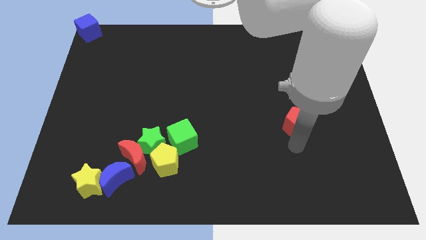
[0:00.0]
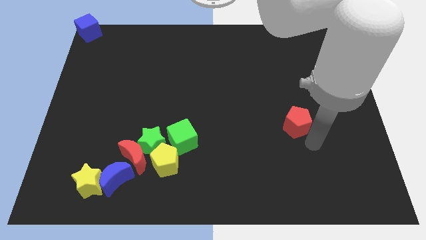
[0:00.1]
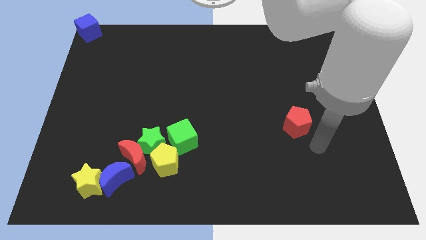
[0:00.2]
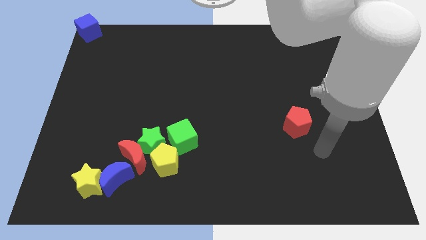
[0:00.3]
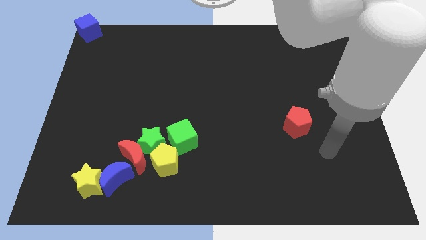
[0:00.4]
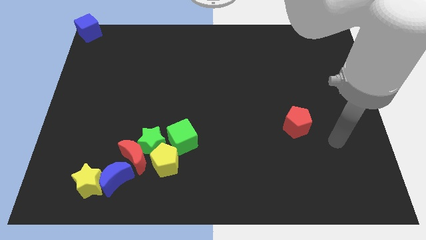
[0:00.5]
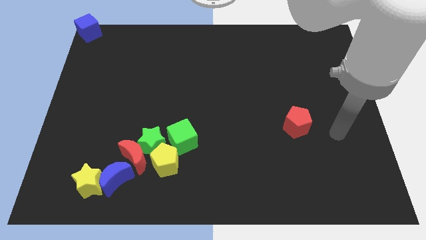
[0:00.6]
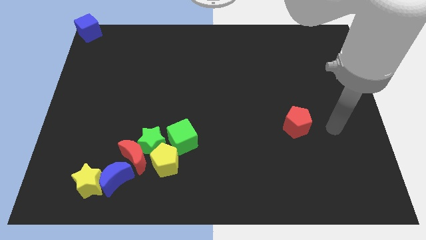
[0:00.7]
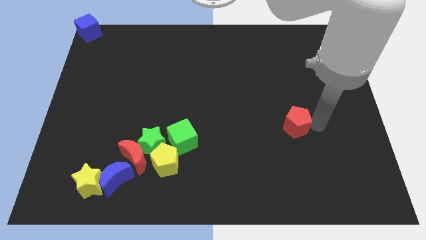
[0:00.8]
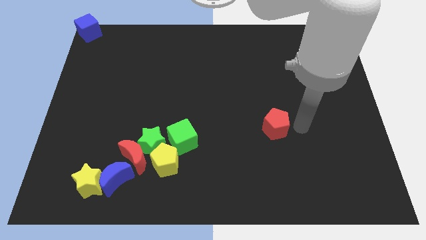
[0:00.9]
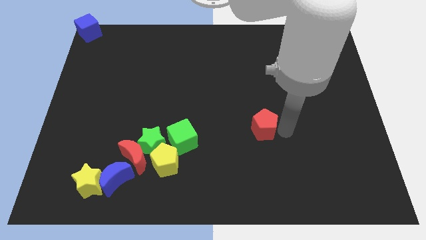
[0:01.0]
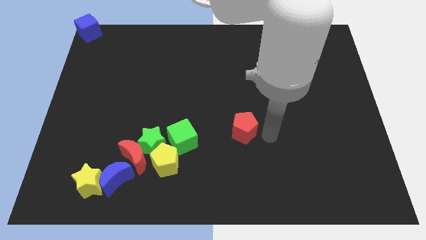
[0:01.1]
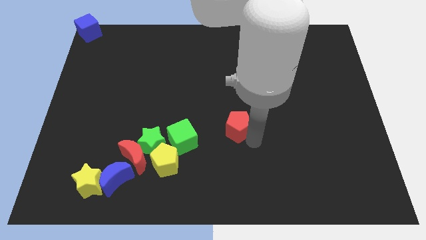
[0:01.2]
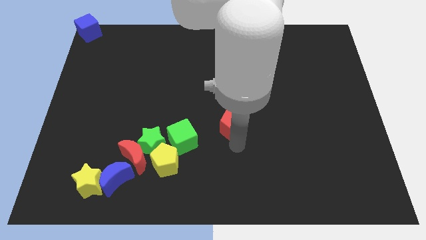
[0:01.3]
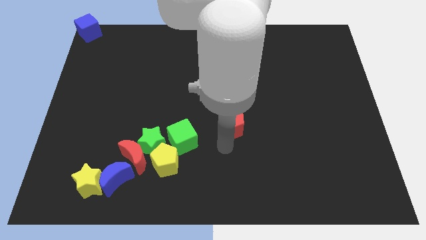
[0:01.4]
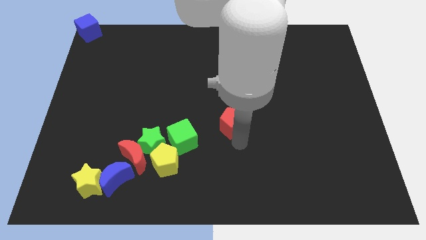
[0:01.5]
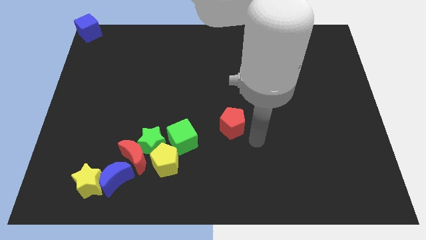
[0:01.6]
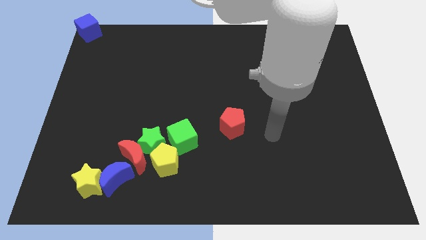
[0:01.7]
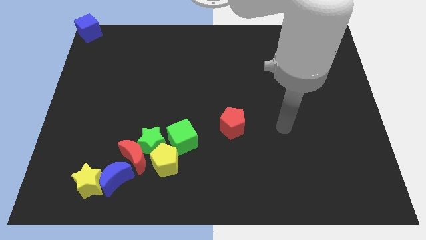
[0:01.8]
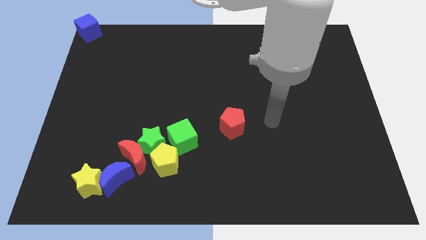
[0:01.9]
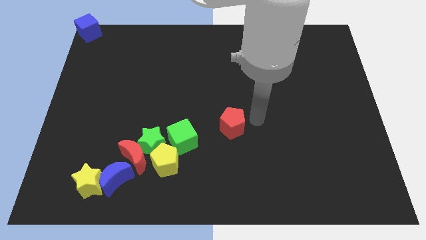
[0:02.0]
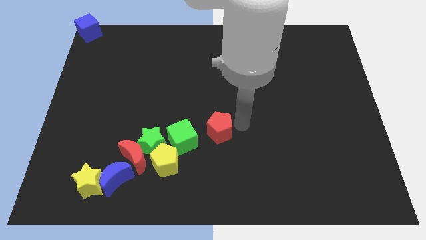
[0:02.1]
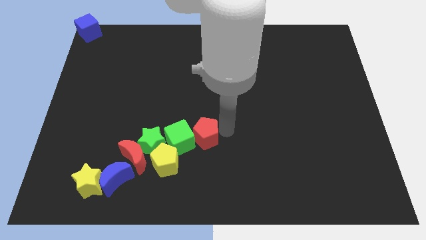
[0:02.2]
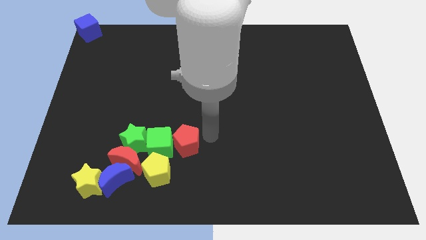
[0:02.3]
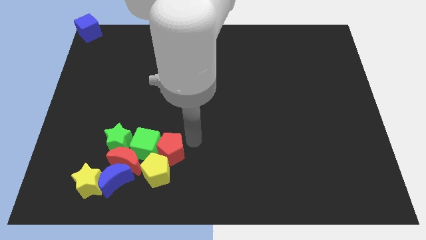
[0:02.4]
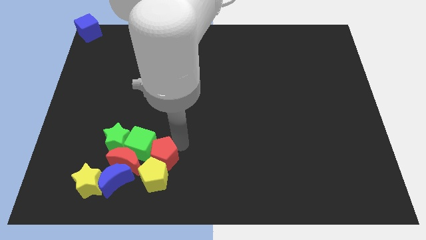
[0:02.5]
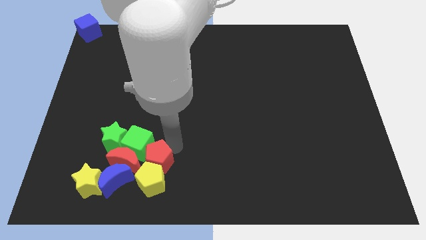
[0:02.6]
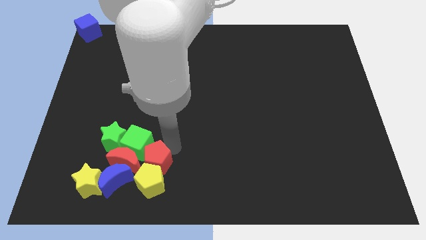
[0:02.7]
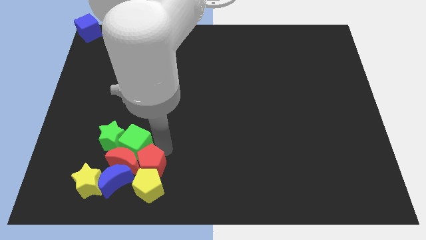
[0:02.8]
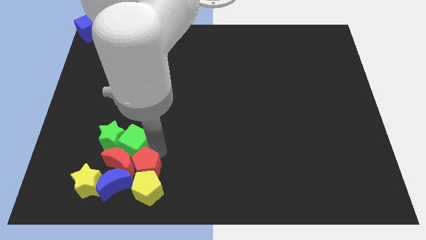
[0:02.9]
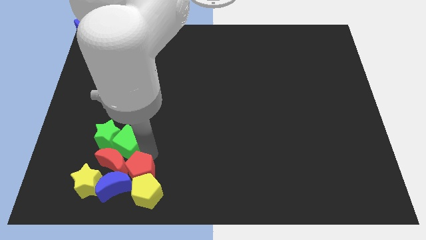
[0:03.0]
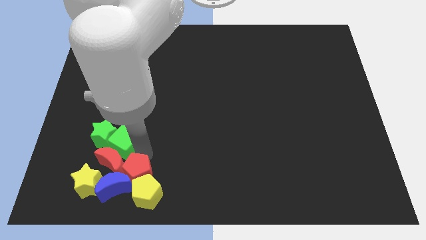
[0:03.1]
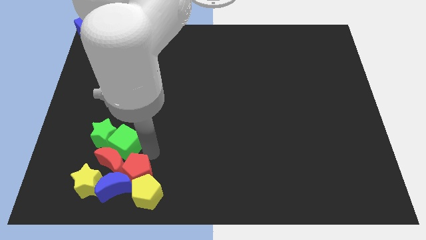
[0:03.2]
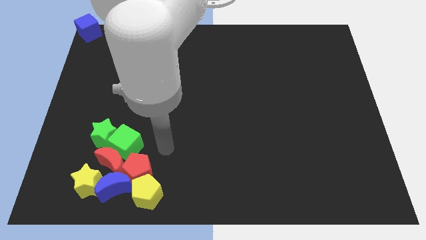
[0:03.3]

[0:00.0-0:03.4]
move the red pentagon into the red moon

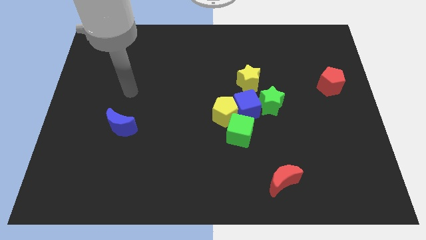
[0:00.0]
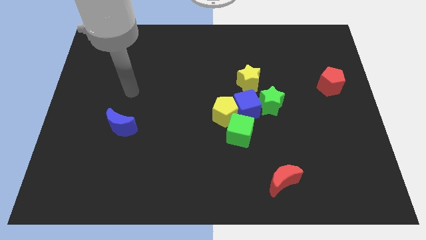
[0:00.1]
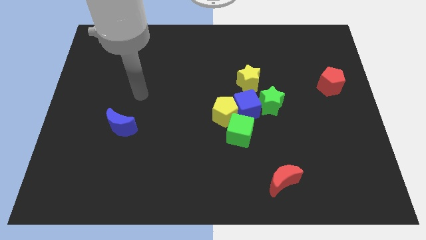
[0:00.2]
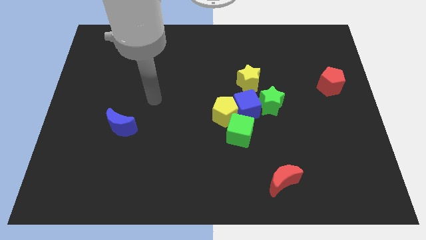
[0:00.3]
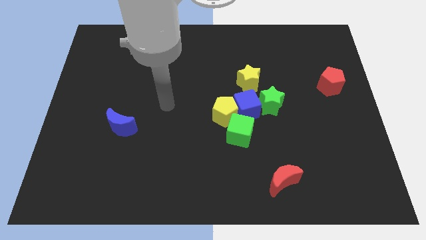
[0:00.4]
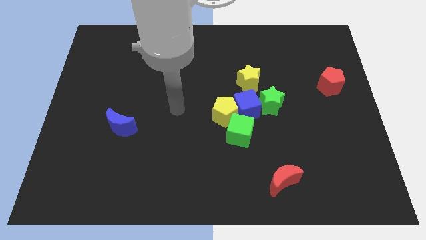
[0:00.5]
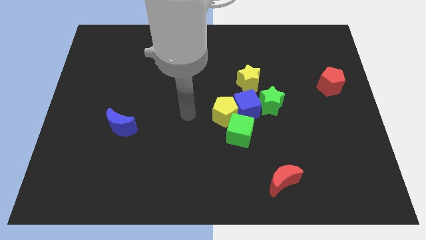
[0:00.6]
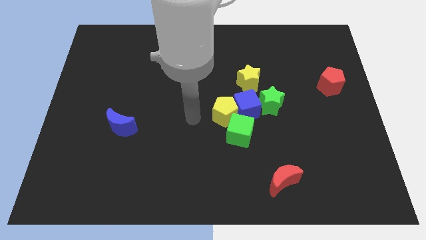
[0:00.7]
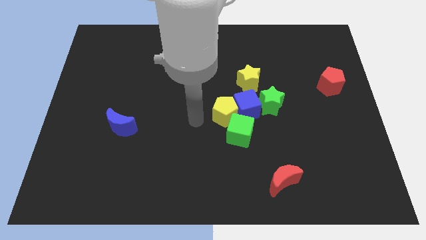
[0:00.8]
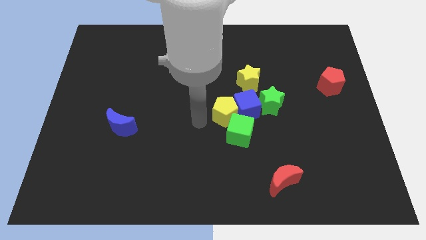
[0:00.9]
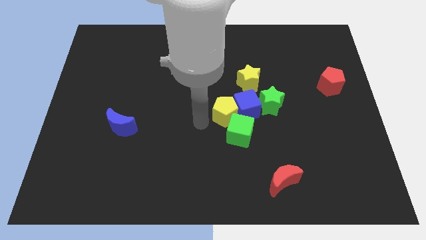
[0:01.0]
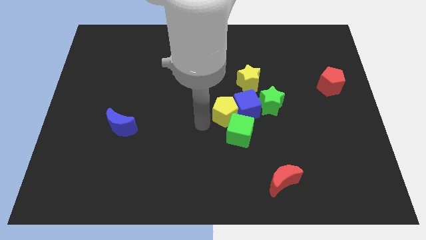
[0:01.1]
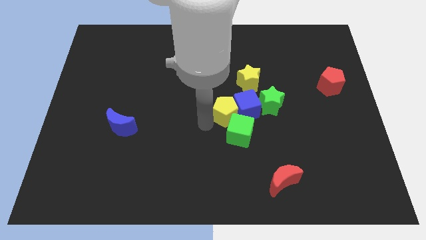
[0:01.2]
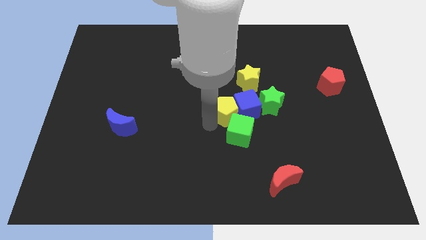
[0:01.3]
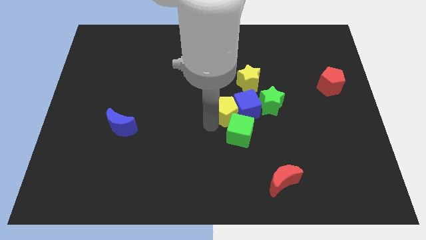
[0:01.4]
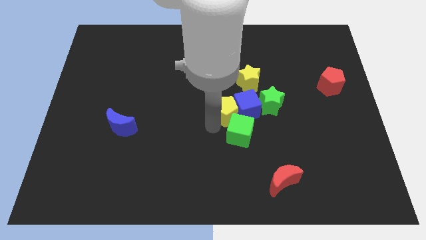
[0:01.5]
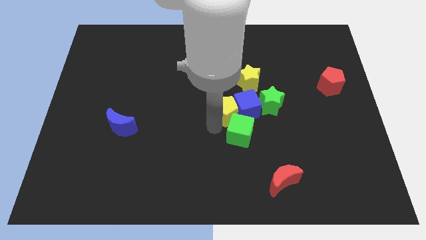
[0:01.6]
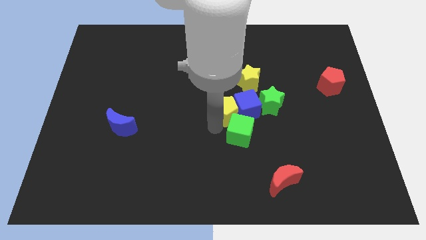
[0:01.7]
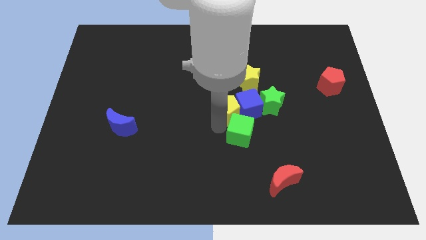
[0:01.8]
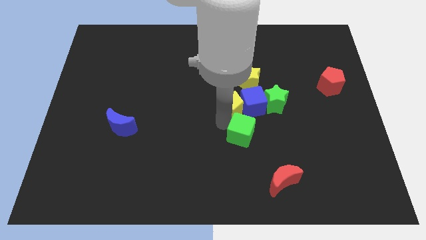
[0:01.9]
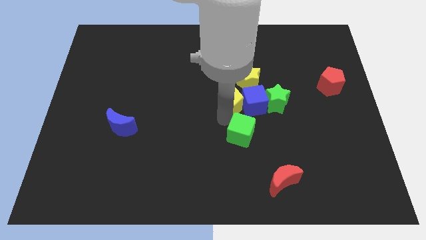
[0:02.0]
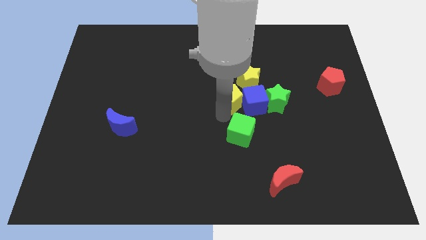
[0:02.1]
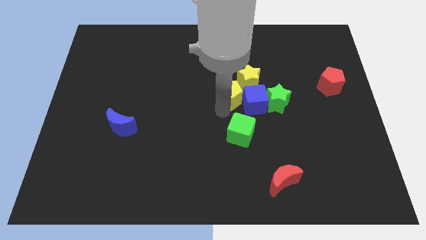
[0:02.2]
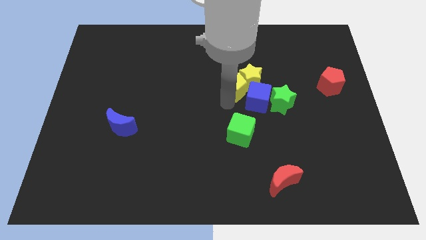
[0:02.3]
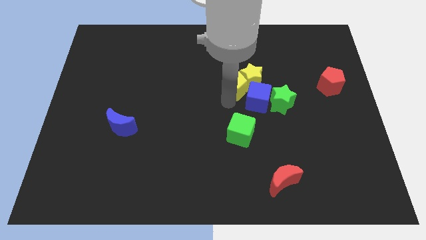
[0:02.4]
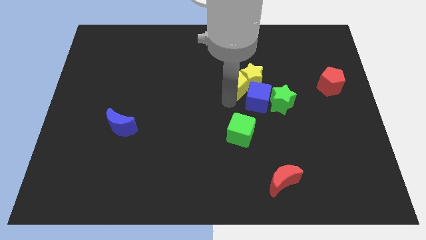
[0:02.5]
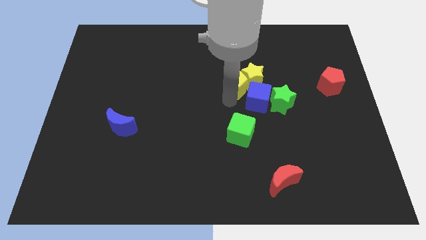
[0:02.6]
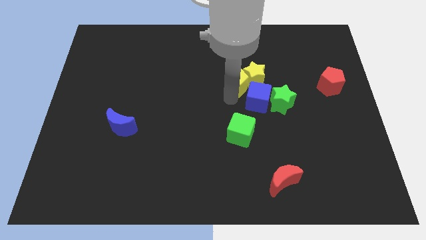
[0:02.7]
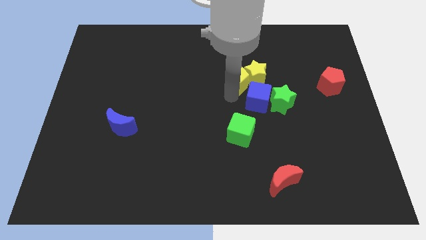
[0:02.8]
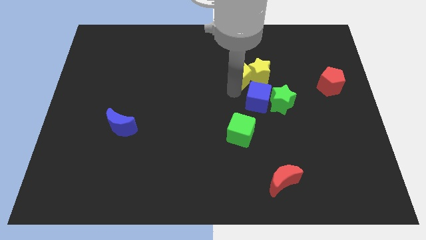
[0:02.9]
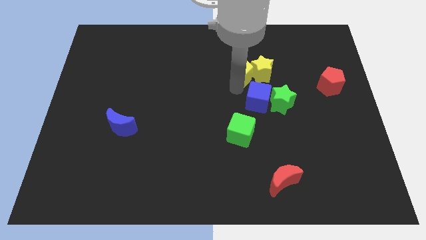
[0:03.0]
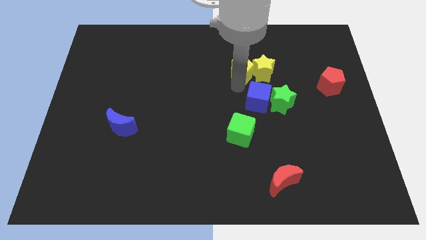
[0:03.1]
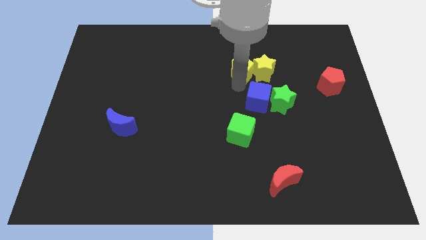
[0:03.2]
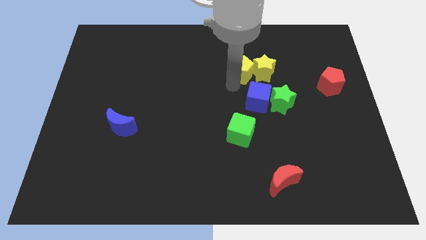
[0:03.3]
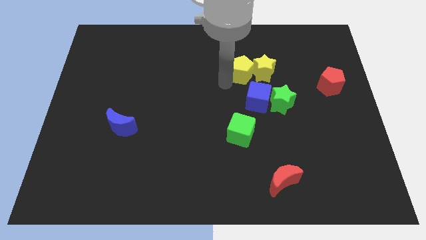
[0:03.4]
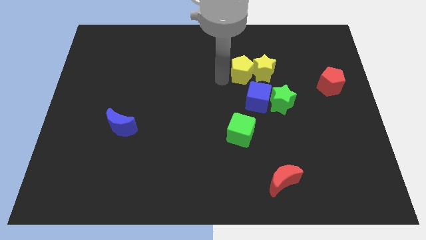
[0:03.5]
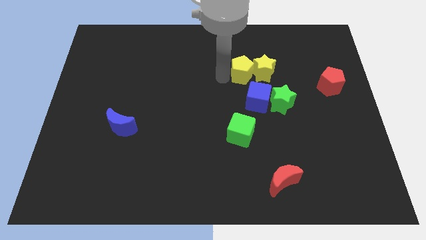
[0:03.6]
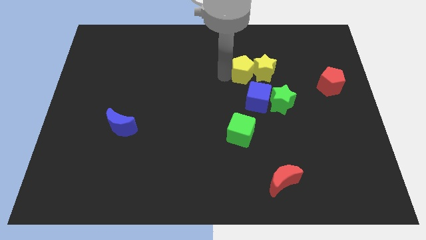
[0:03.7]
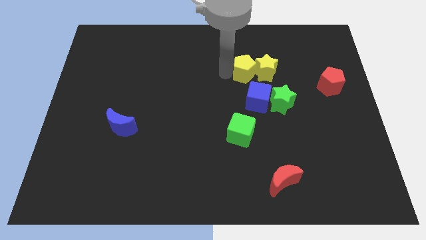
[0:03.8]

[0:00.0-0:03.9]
push yellow pentagon into yellow star

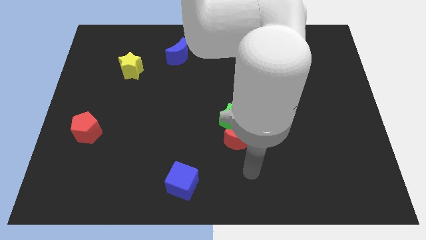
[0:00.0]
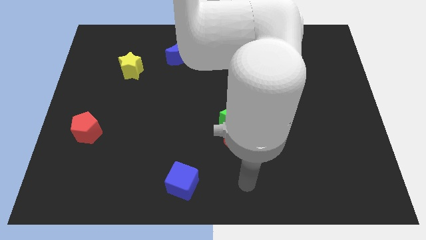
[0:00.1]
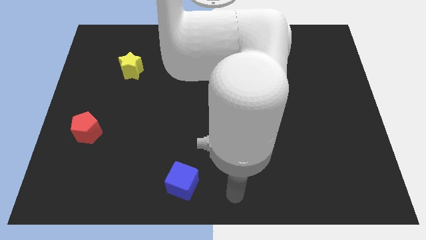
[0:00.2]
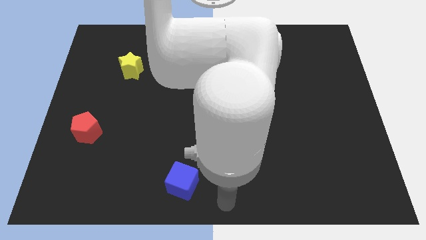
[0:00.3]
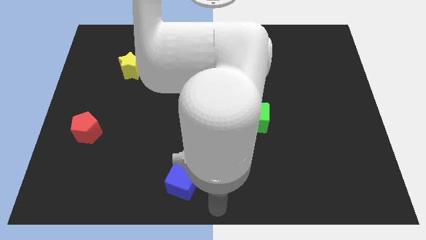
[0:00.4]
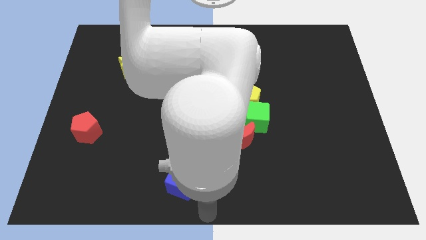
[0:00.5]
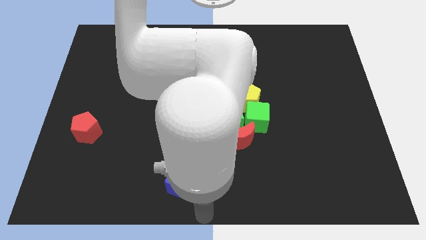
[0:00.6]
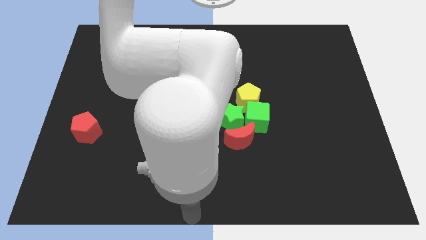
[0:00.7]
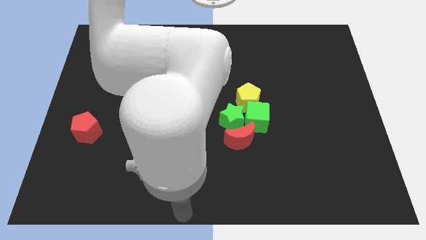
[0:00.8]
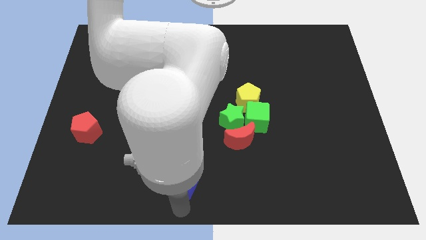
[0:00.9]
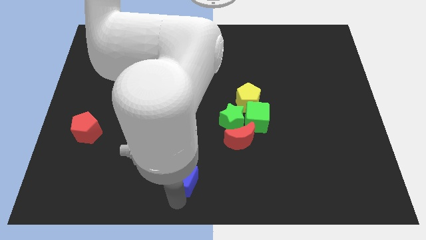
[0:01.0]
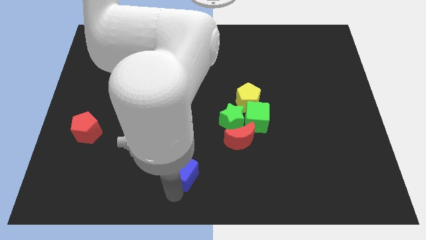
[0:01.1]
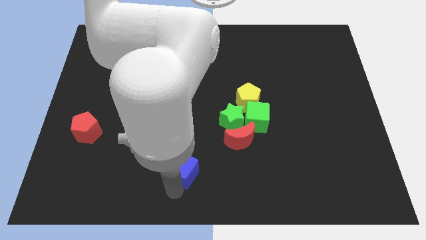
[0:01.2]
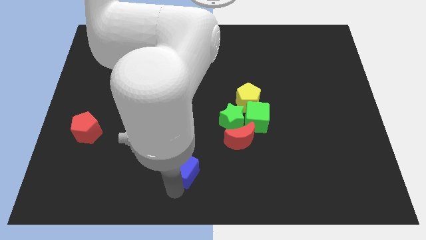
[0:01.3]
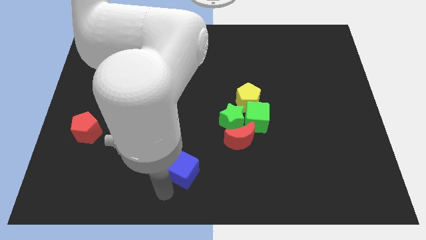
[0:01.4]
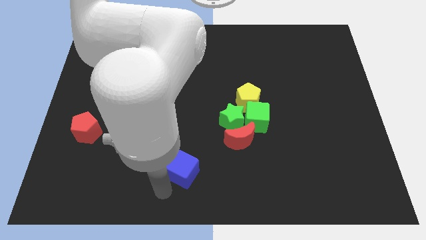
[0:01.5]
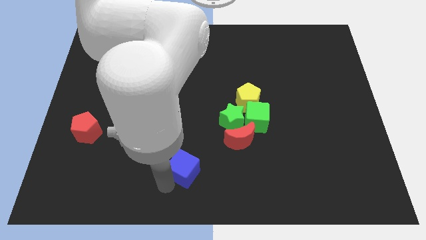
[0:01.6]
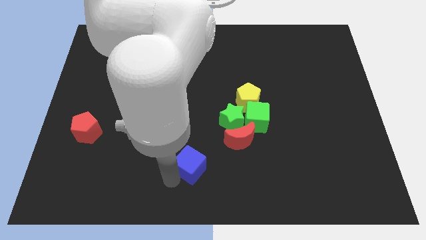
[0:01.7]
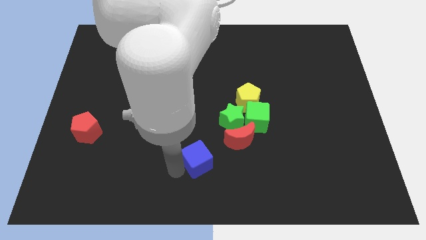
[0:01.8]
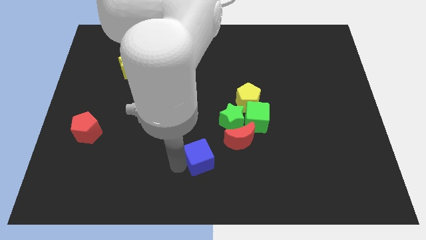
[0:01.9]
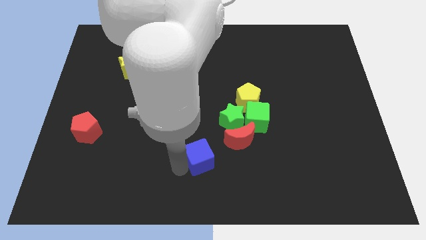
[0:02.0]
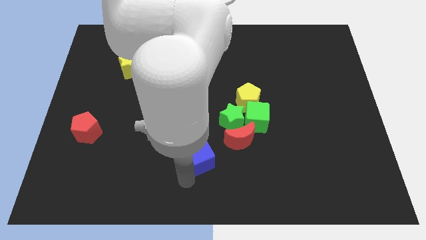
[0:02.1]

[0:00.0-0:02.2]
move the blue cube towards the left to the red crescent
